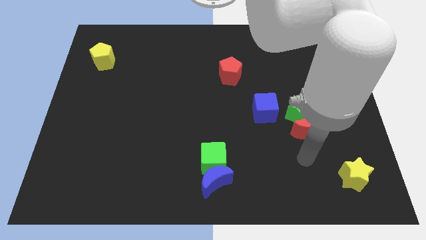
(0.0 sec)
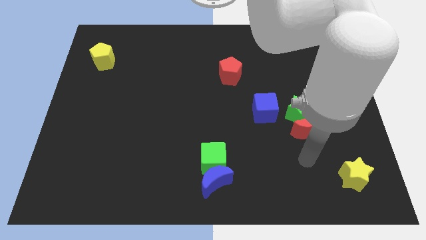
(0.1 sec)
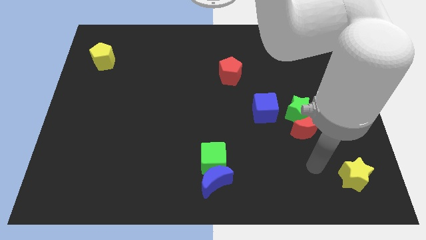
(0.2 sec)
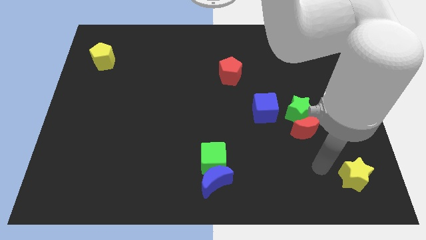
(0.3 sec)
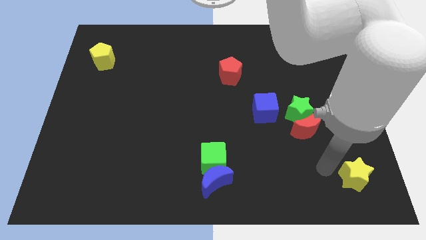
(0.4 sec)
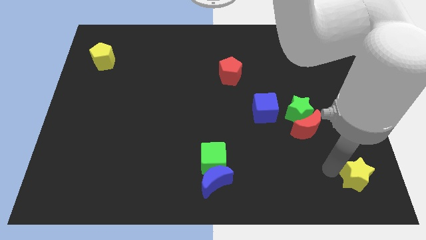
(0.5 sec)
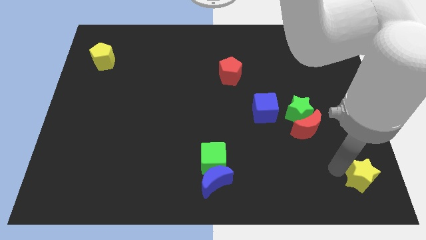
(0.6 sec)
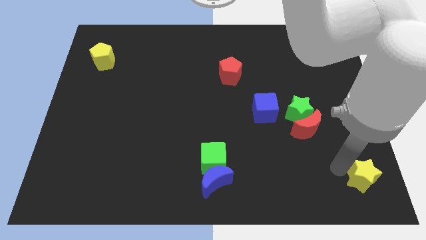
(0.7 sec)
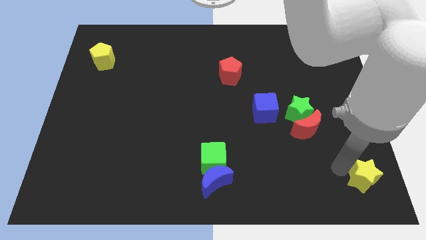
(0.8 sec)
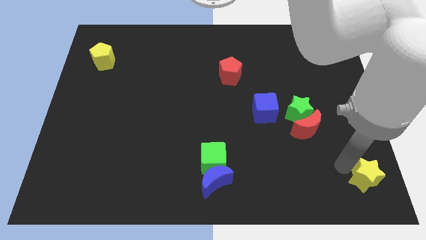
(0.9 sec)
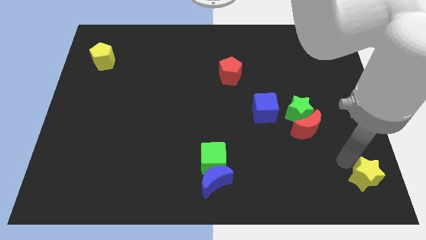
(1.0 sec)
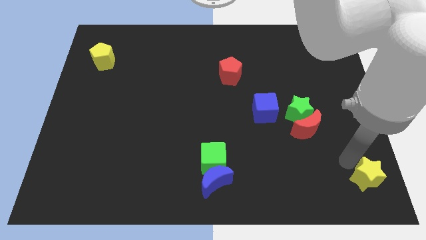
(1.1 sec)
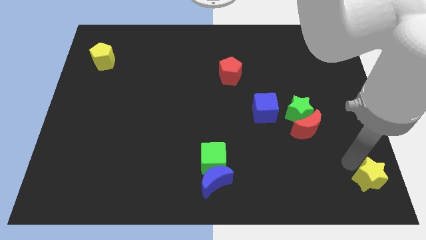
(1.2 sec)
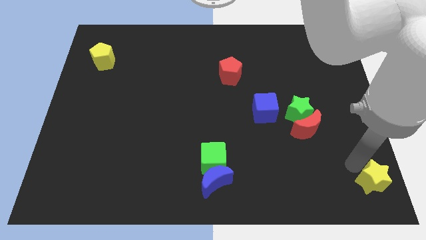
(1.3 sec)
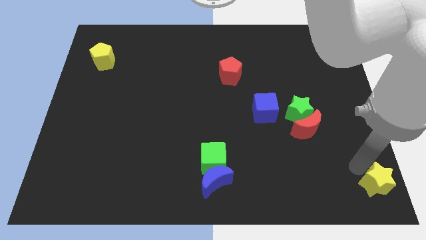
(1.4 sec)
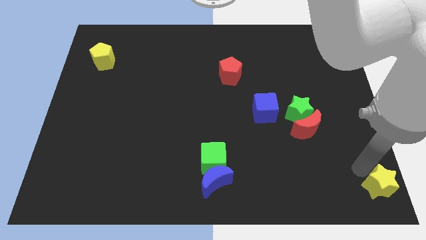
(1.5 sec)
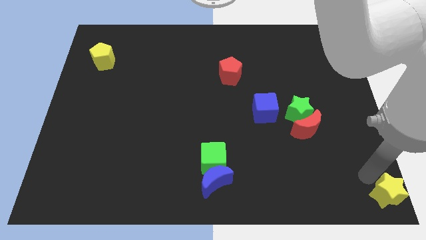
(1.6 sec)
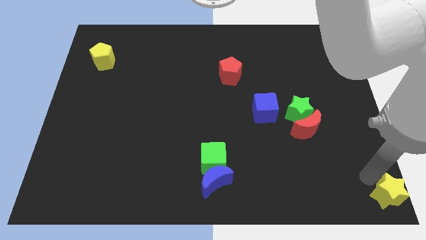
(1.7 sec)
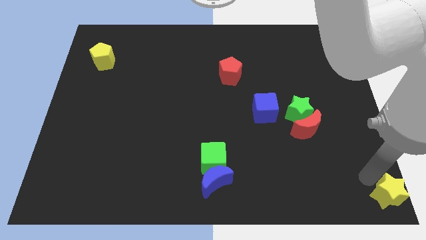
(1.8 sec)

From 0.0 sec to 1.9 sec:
drag the yellow star to the bottom right

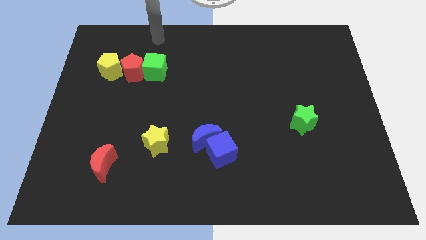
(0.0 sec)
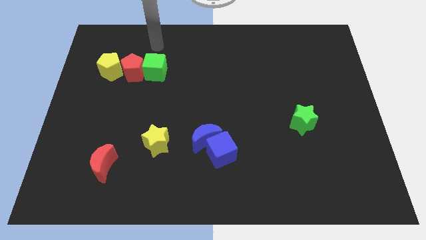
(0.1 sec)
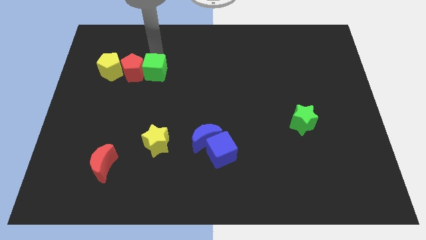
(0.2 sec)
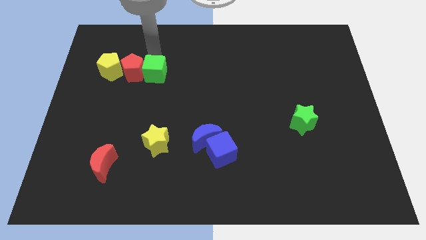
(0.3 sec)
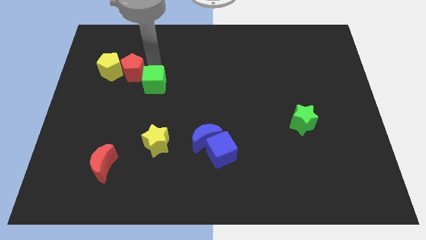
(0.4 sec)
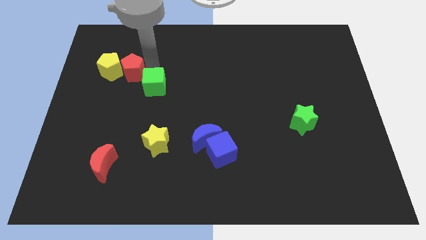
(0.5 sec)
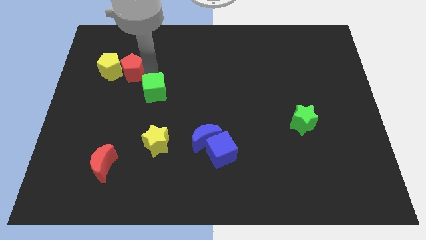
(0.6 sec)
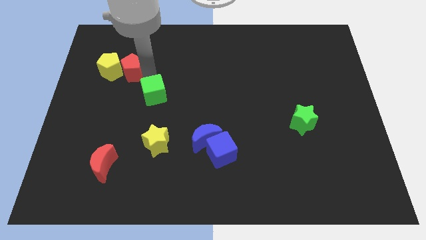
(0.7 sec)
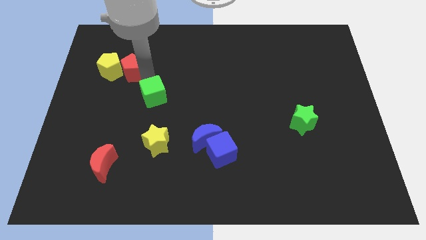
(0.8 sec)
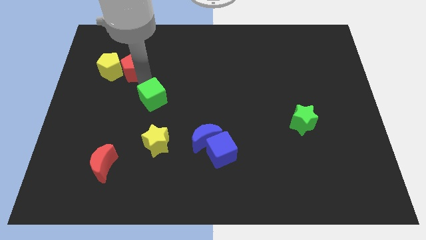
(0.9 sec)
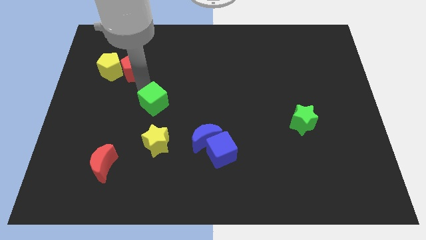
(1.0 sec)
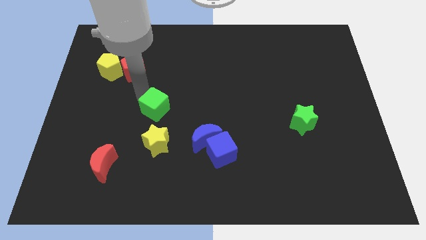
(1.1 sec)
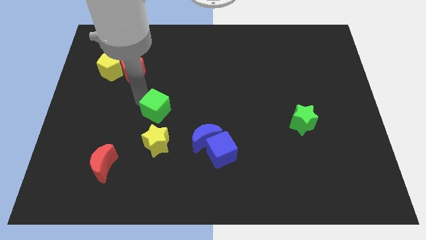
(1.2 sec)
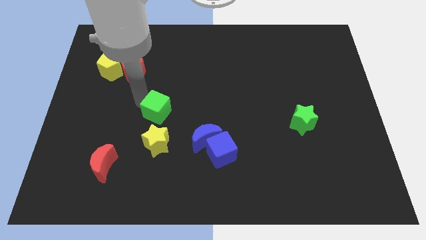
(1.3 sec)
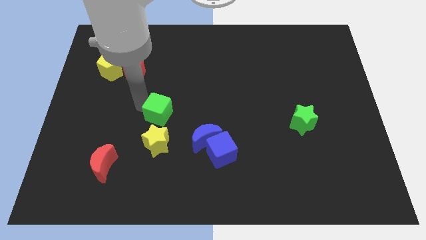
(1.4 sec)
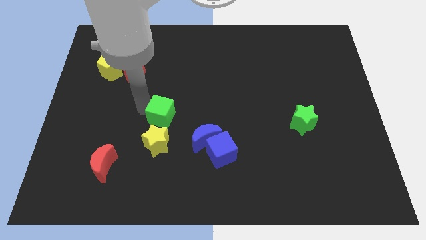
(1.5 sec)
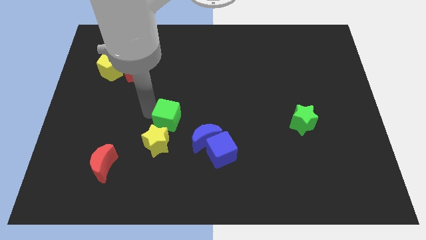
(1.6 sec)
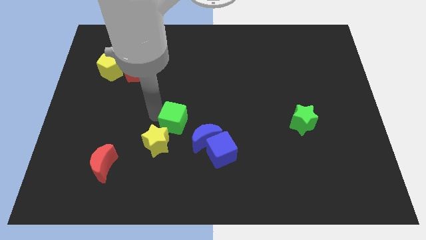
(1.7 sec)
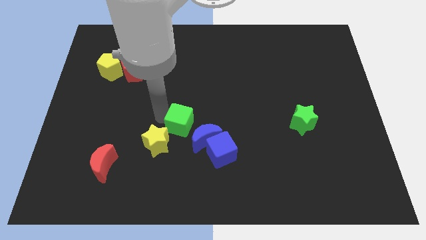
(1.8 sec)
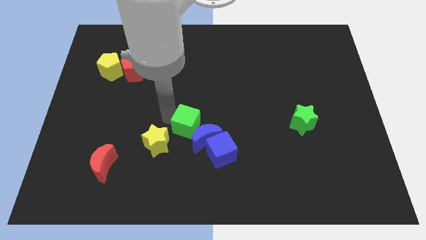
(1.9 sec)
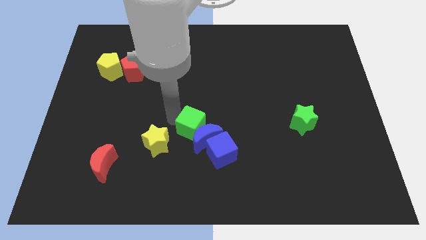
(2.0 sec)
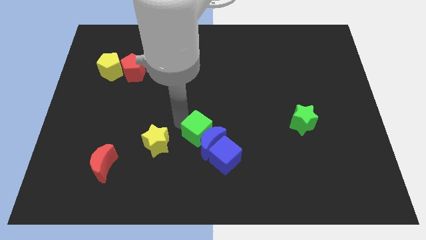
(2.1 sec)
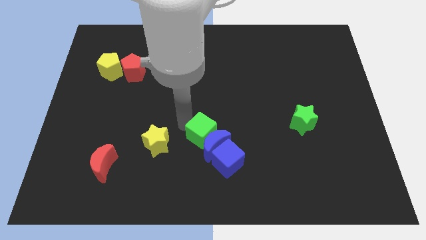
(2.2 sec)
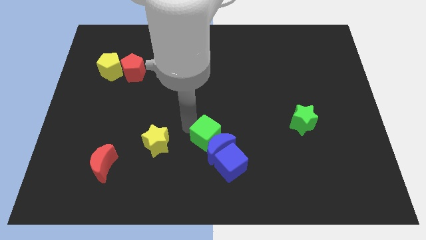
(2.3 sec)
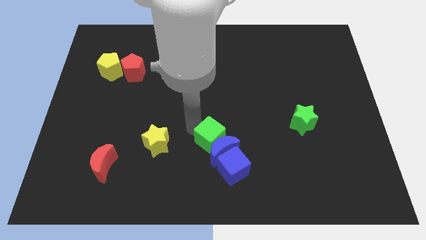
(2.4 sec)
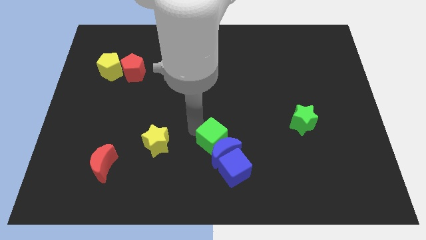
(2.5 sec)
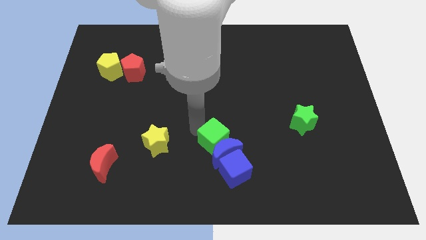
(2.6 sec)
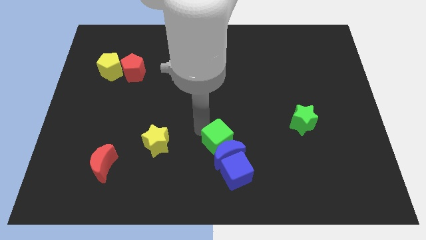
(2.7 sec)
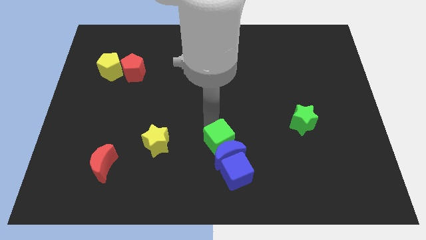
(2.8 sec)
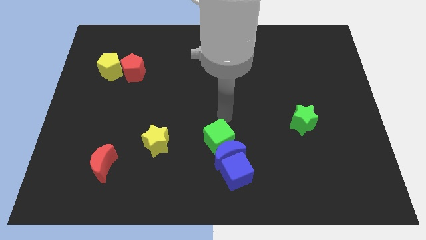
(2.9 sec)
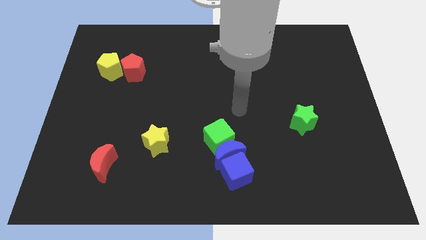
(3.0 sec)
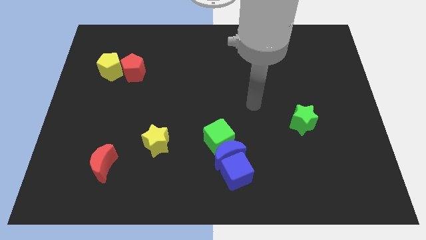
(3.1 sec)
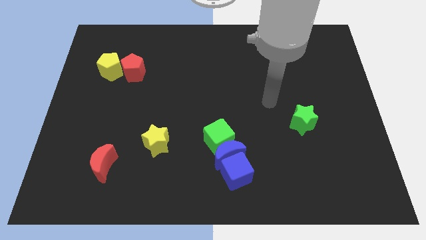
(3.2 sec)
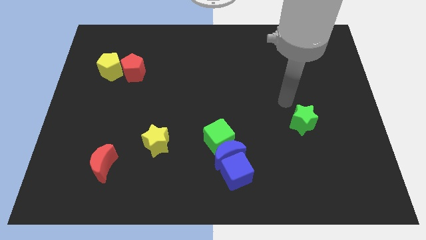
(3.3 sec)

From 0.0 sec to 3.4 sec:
push the green cube into the blue crescent

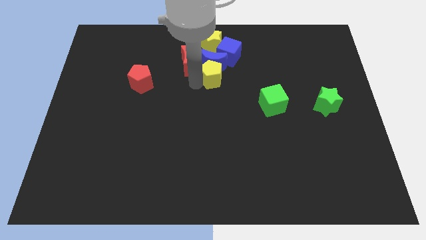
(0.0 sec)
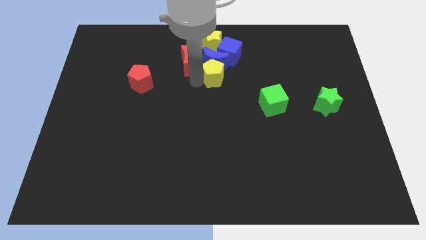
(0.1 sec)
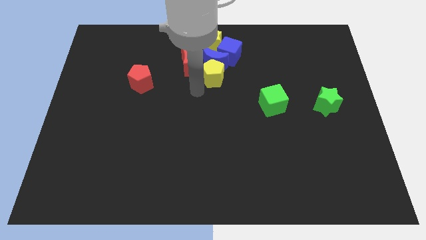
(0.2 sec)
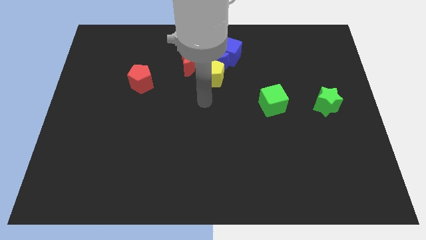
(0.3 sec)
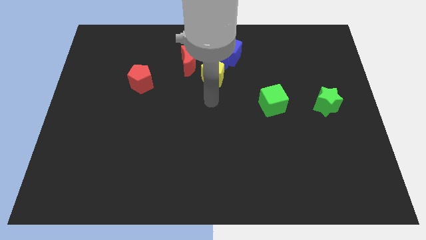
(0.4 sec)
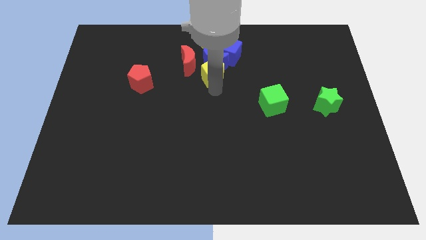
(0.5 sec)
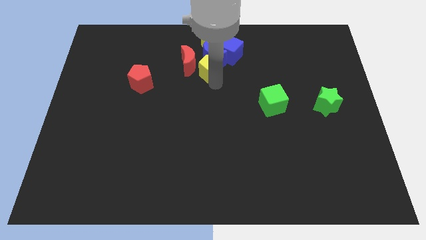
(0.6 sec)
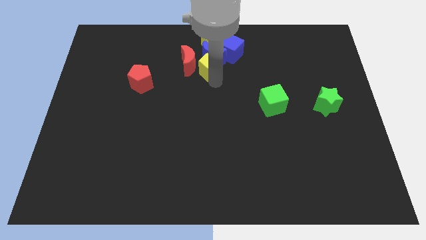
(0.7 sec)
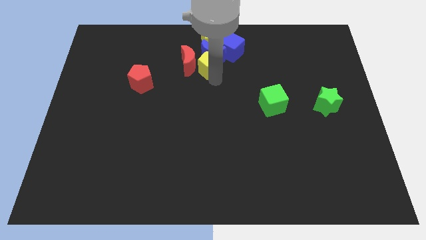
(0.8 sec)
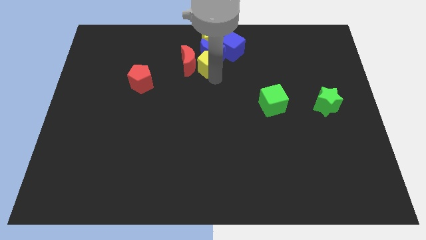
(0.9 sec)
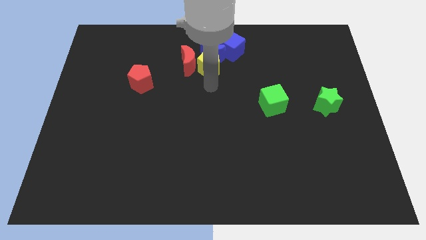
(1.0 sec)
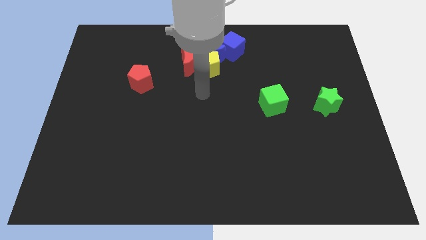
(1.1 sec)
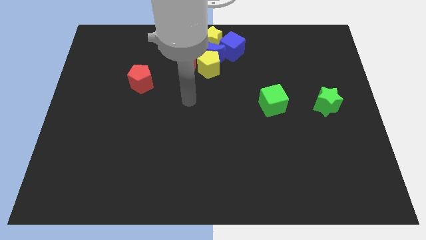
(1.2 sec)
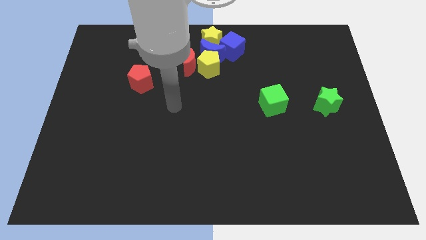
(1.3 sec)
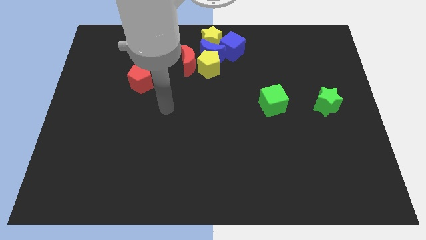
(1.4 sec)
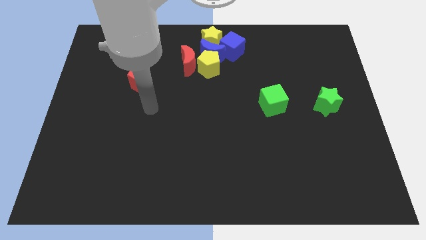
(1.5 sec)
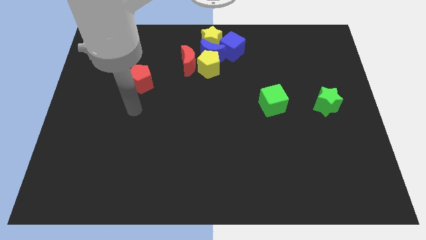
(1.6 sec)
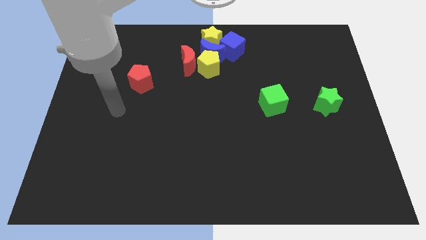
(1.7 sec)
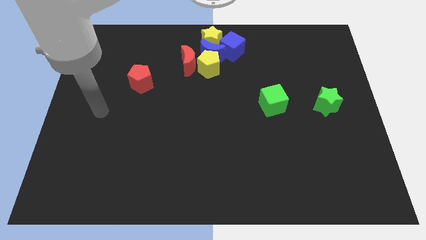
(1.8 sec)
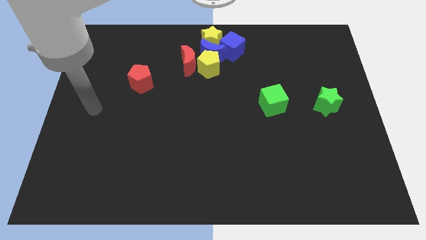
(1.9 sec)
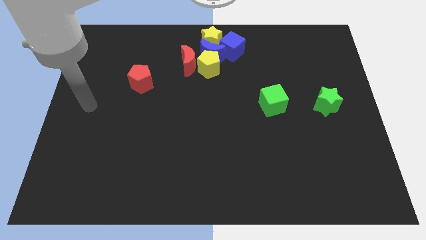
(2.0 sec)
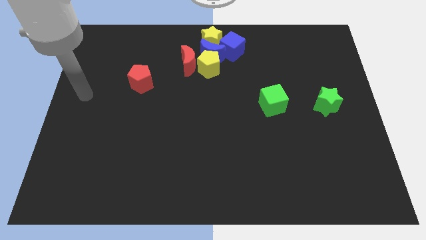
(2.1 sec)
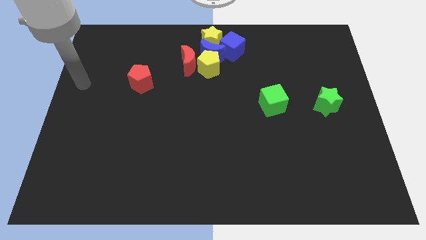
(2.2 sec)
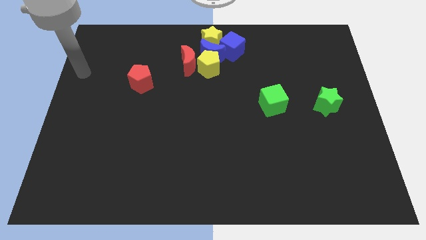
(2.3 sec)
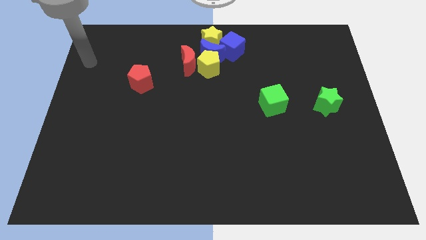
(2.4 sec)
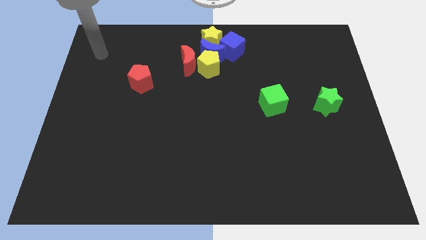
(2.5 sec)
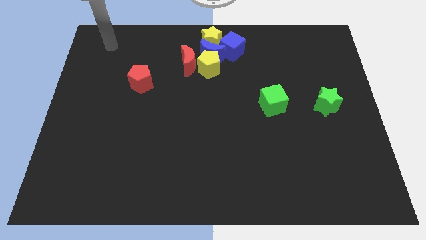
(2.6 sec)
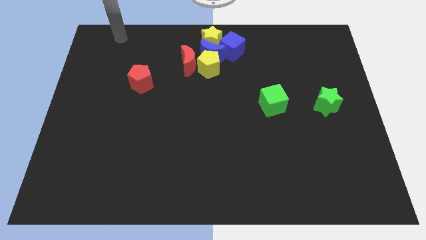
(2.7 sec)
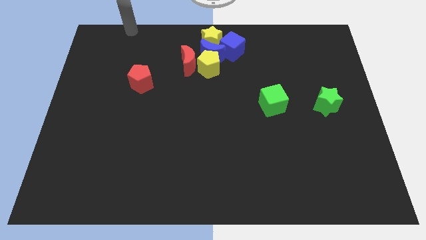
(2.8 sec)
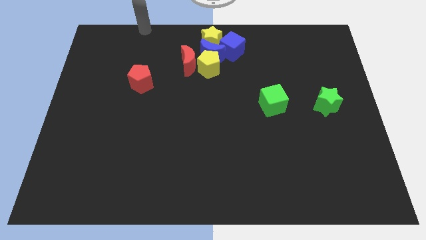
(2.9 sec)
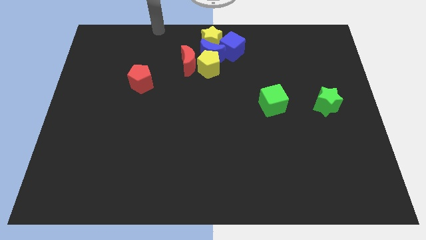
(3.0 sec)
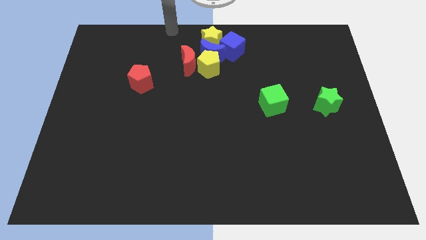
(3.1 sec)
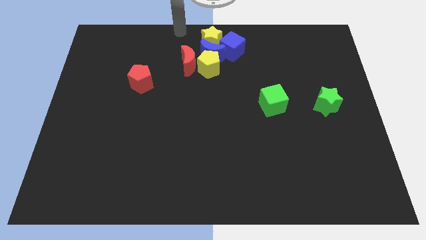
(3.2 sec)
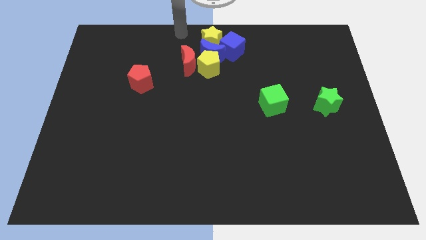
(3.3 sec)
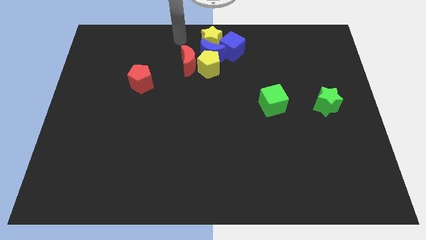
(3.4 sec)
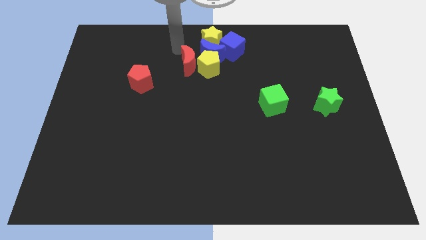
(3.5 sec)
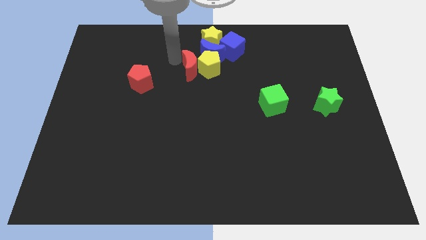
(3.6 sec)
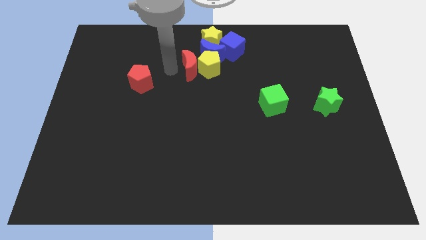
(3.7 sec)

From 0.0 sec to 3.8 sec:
adjust the group of blocks at the top center of the table
